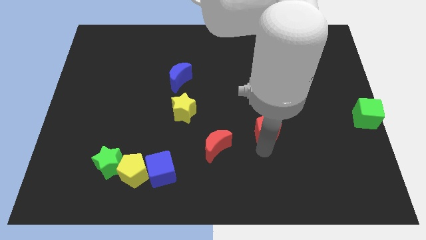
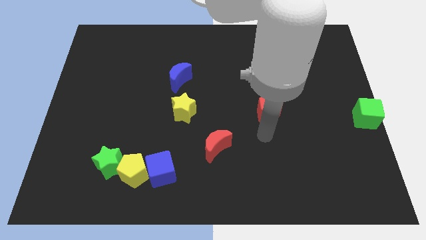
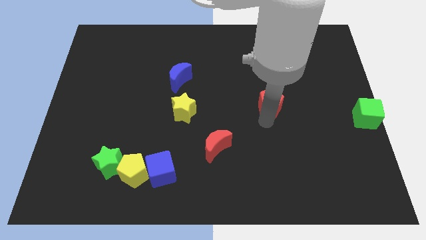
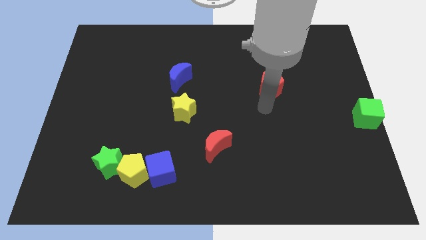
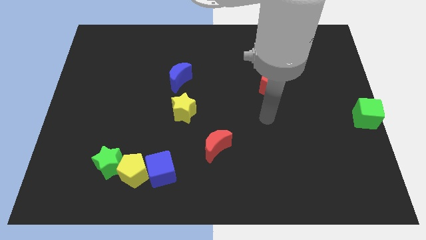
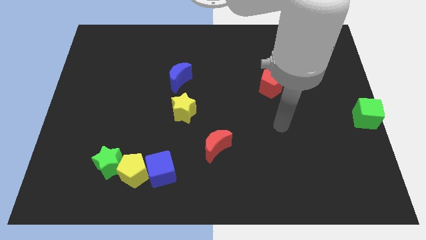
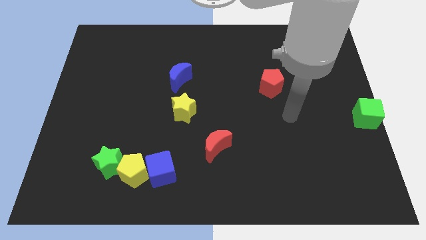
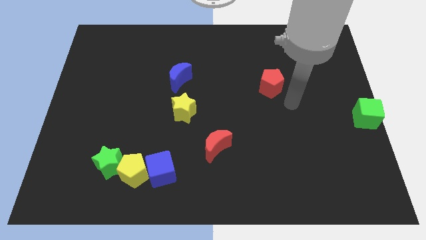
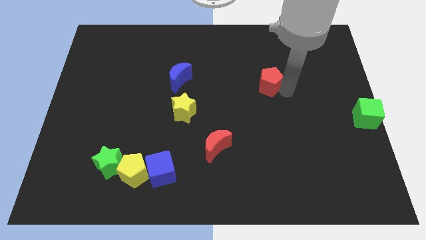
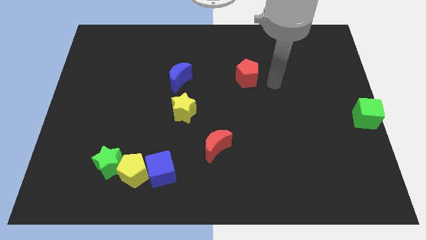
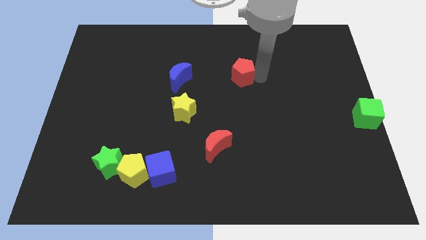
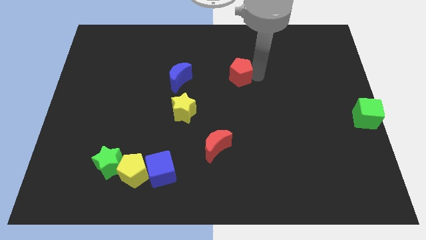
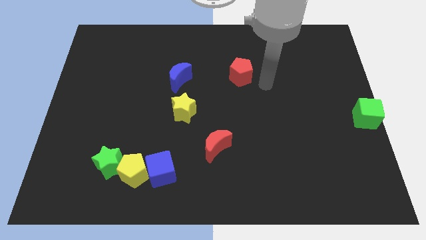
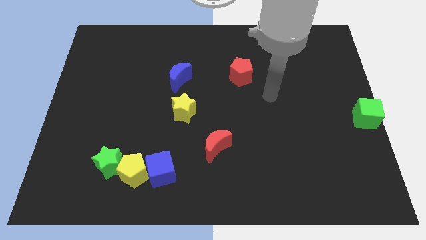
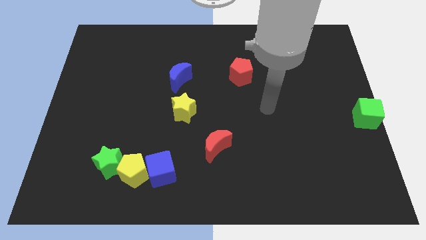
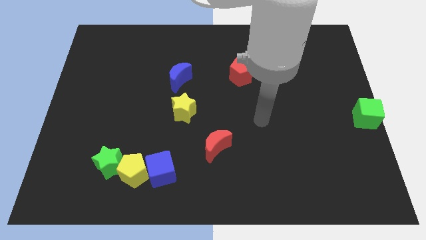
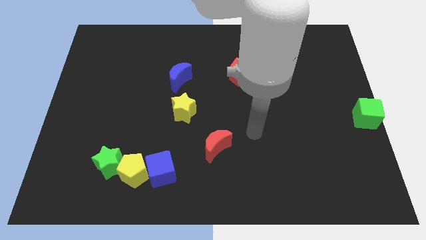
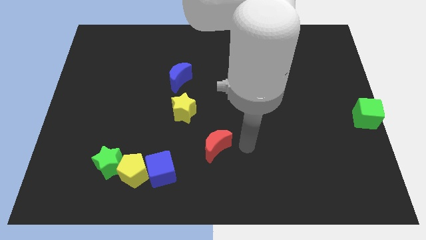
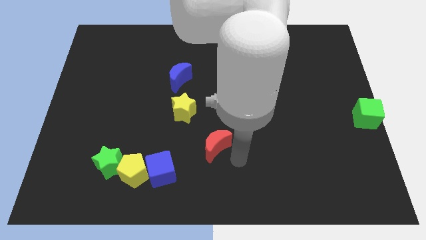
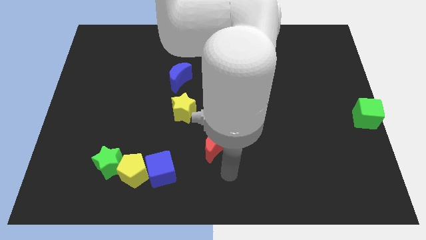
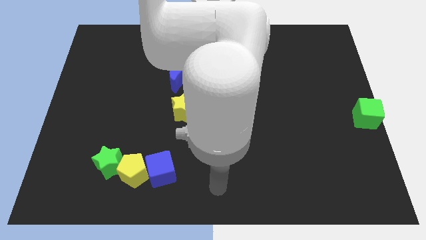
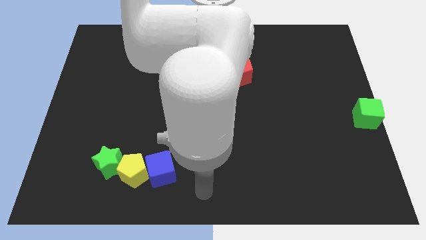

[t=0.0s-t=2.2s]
place the red pentagon to the right of the blue moon

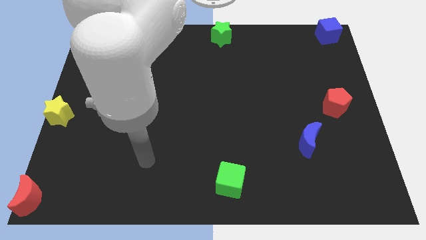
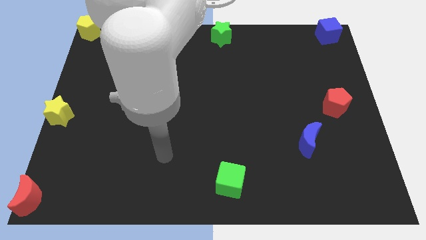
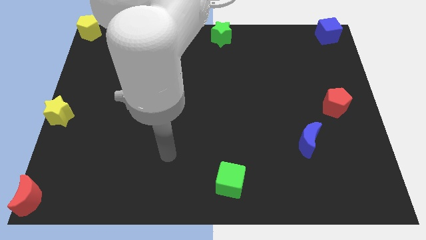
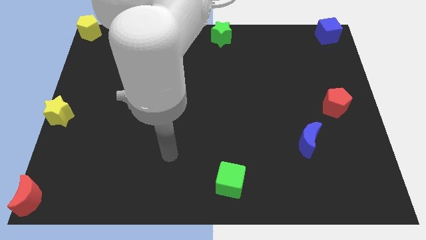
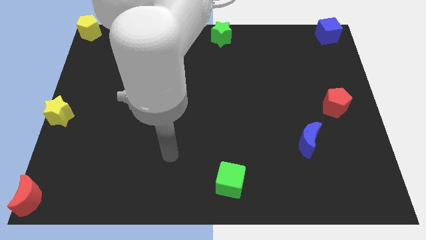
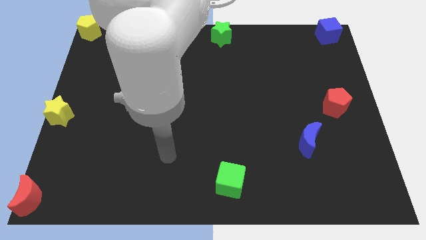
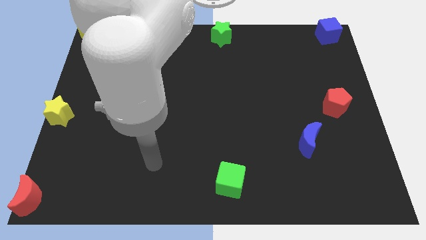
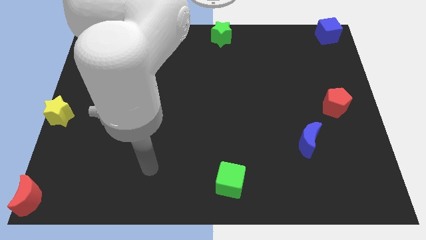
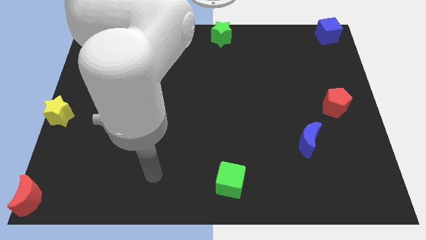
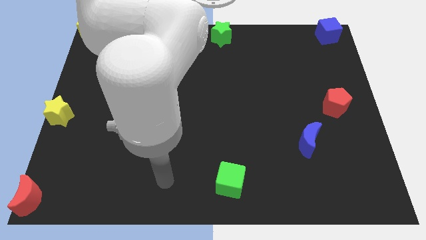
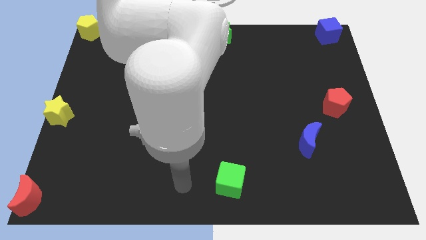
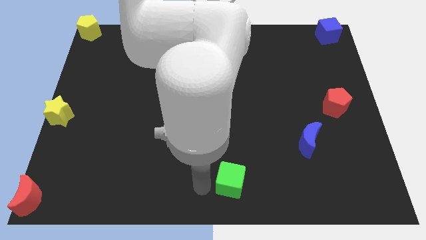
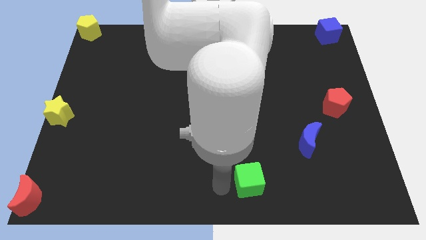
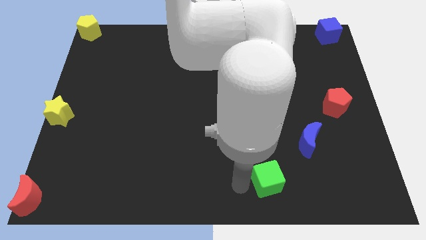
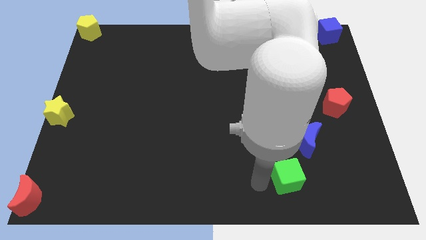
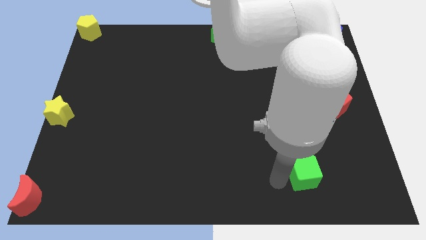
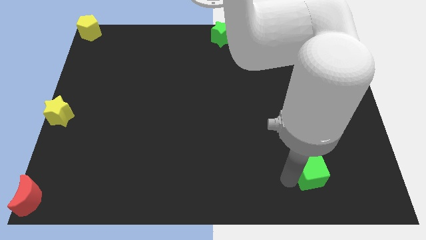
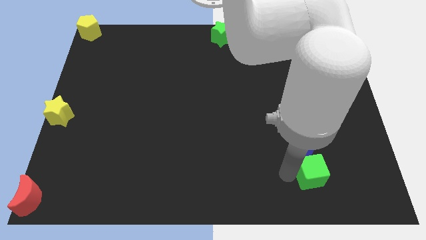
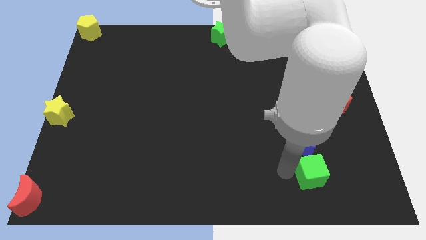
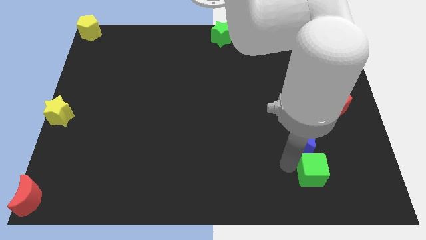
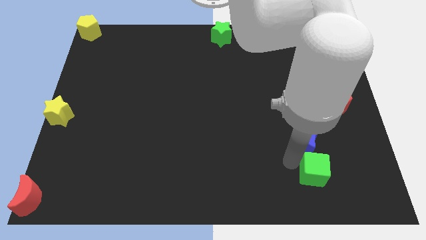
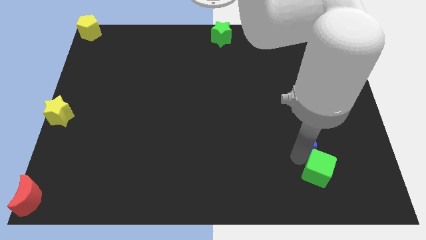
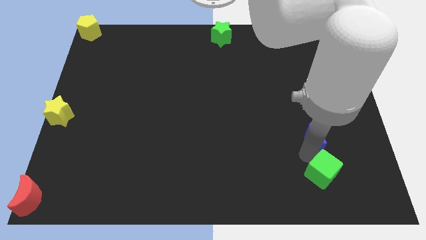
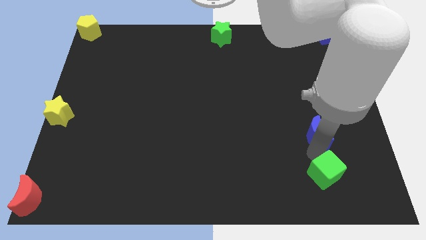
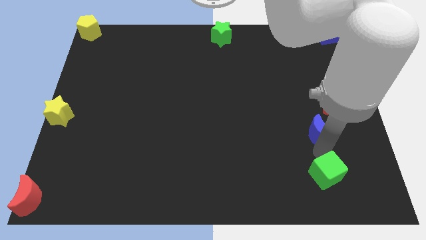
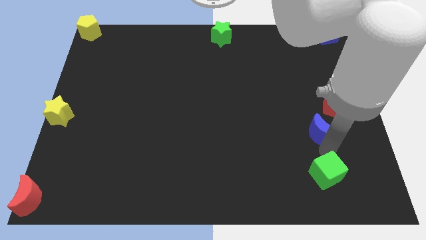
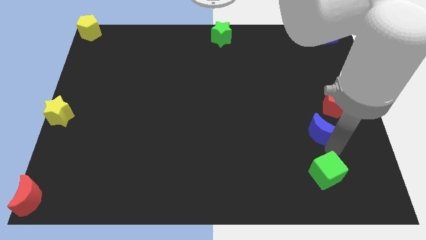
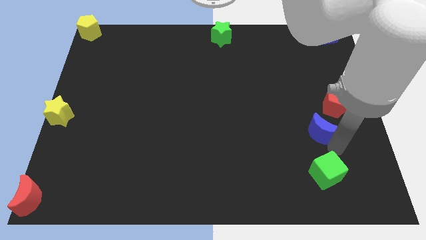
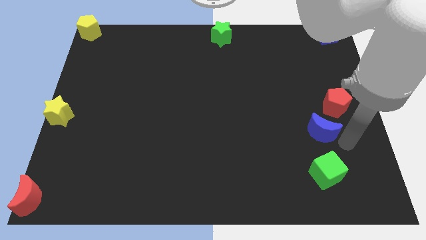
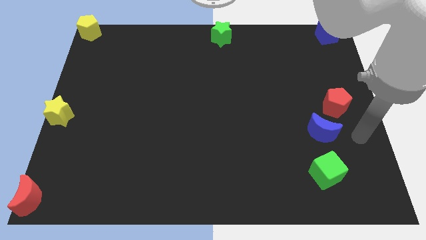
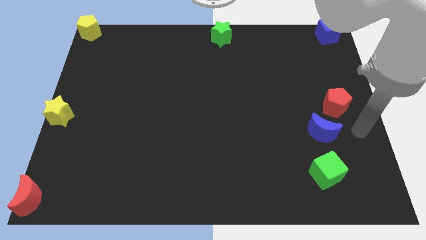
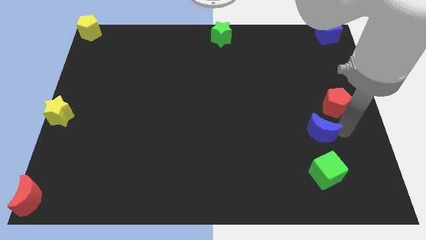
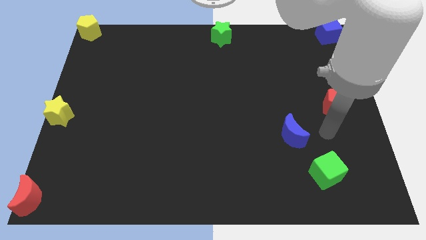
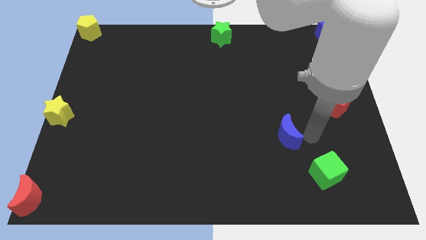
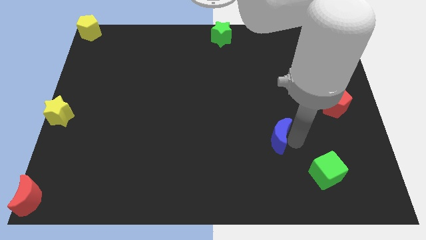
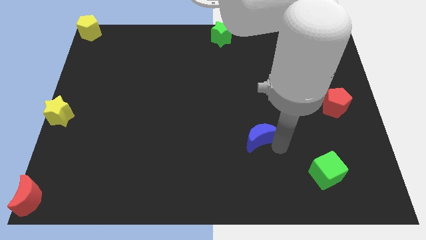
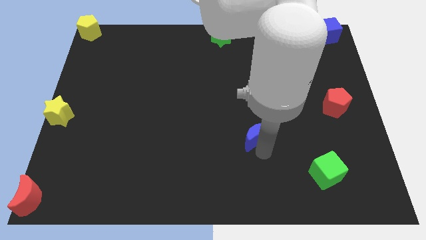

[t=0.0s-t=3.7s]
separate the blue moon and green cube

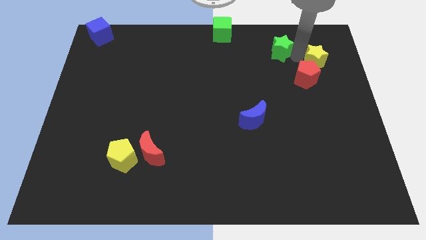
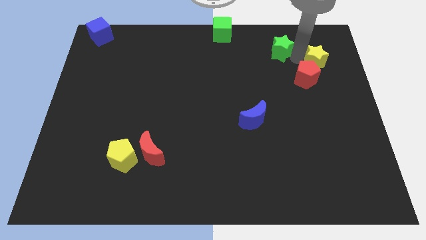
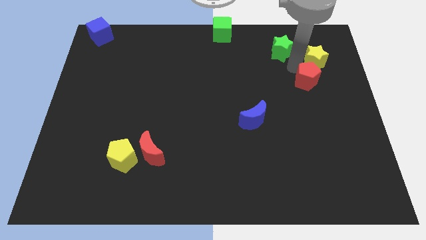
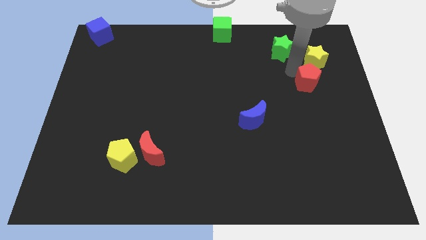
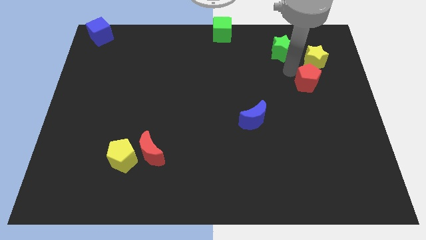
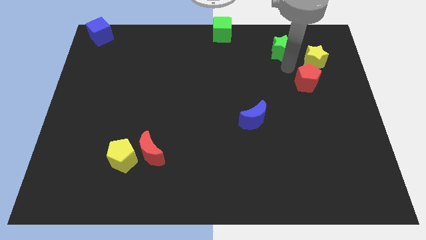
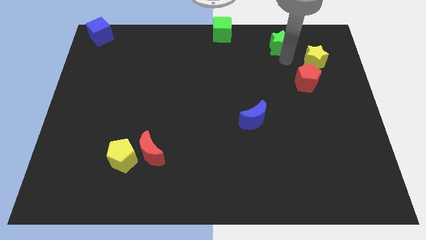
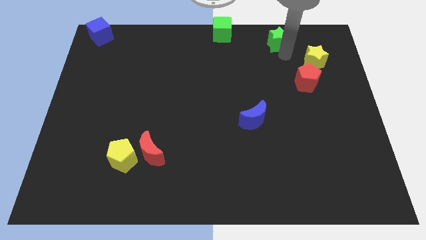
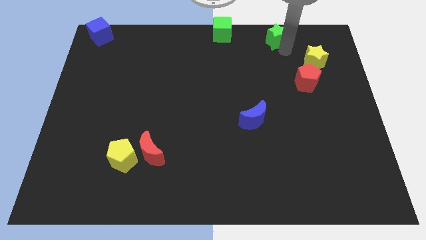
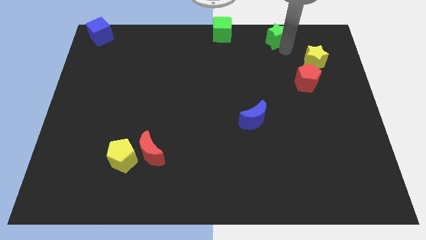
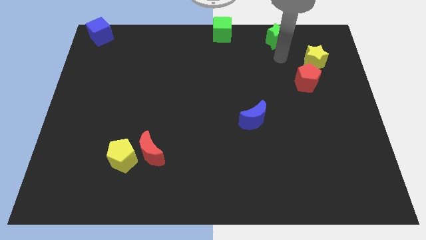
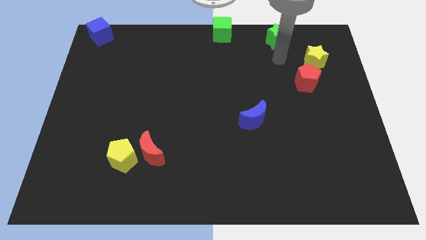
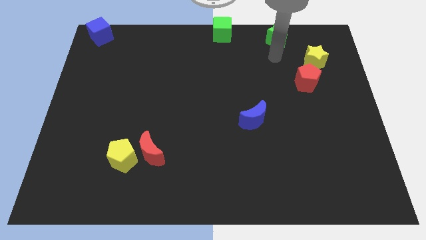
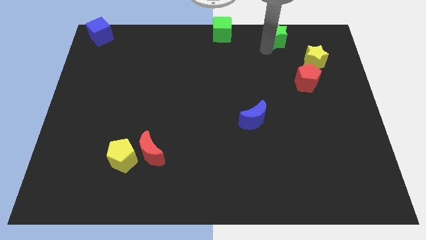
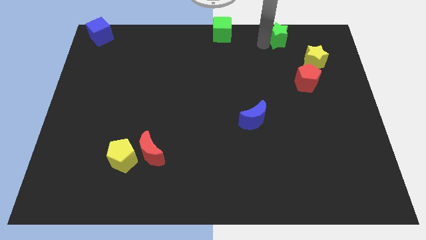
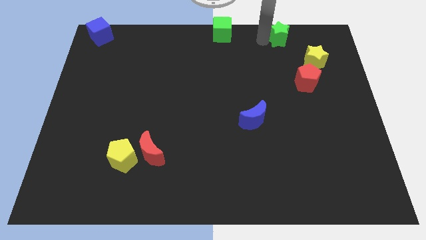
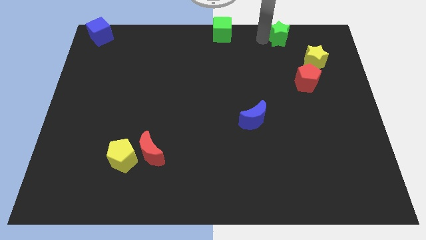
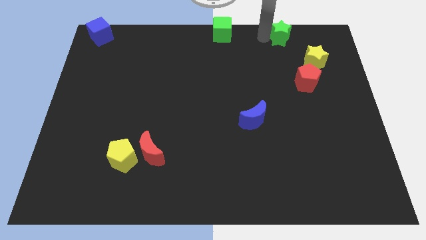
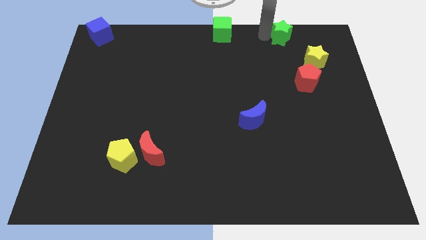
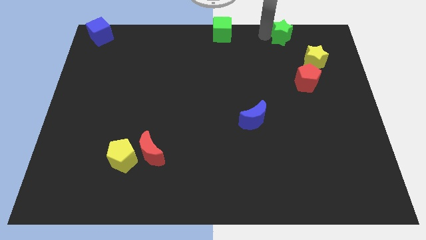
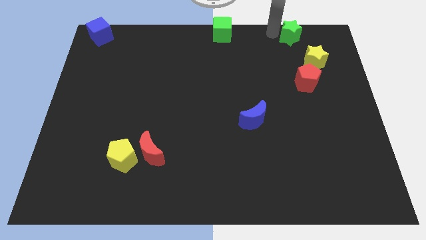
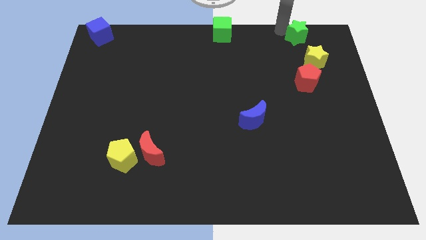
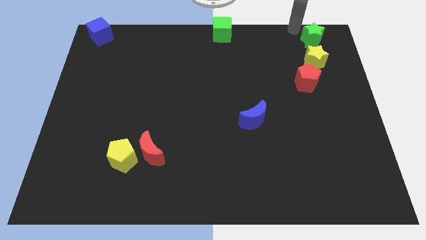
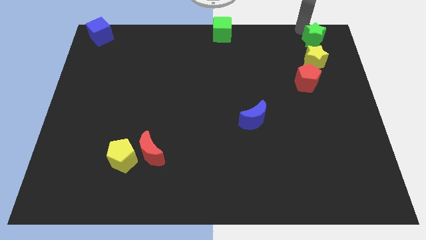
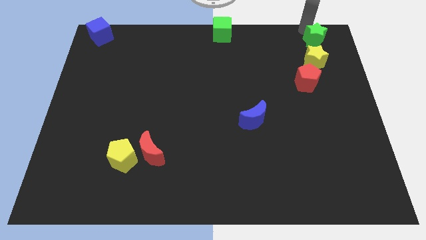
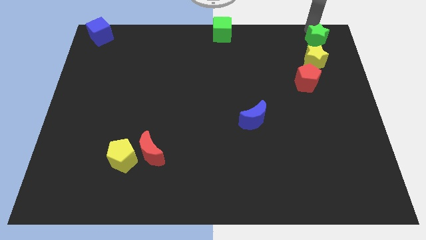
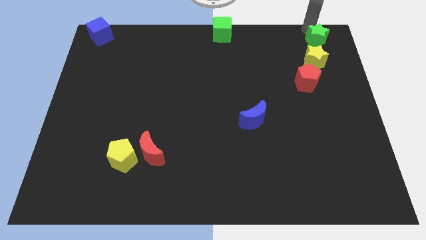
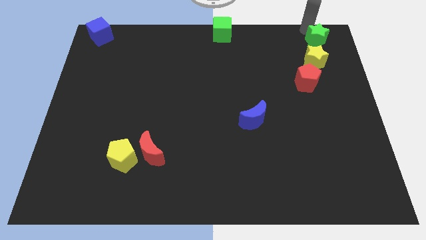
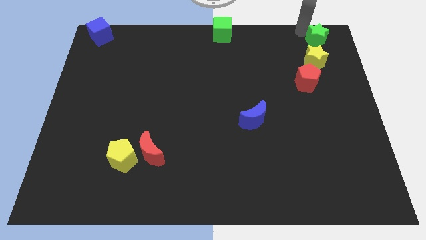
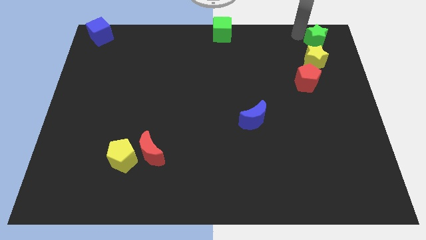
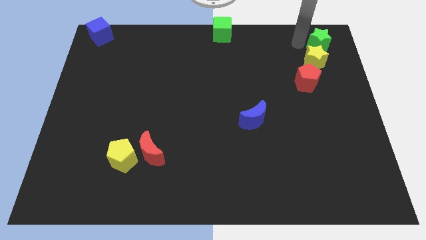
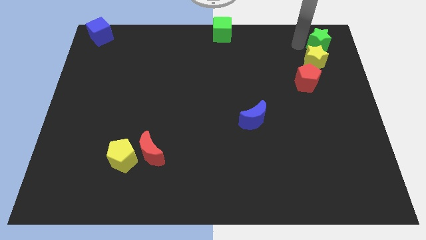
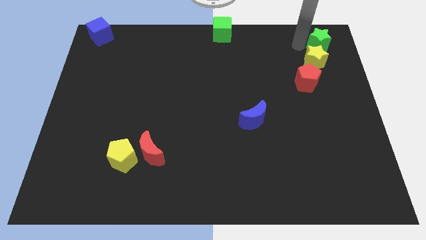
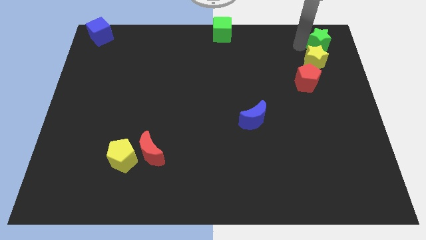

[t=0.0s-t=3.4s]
place green star on top of yellow star
